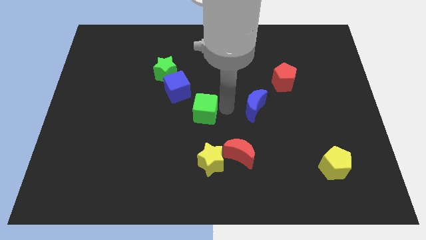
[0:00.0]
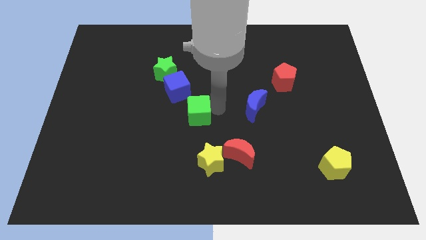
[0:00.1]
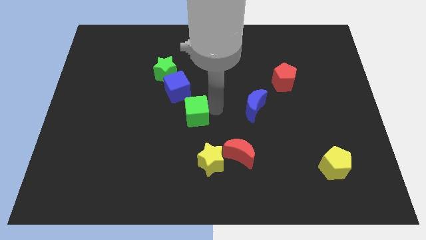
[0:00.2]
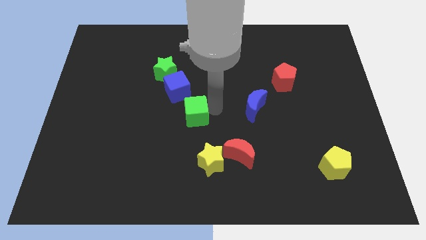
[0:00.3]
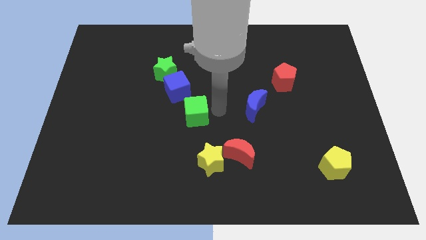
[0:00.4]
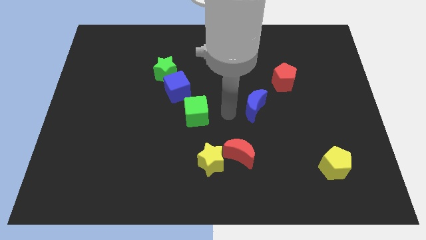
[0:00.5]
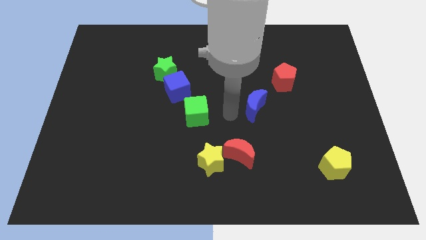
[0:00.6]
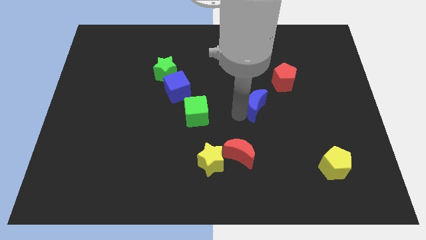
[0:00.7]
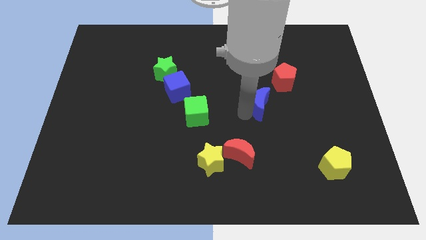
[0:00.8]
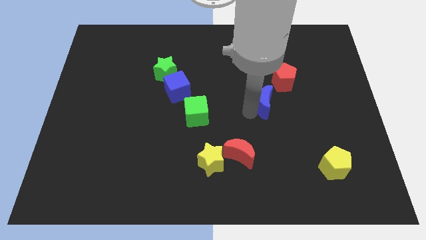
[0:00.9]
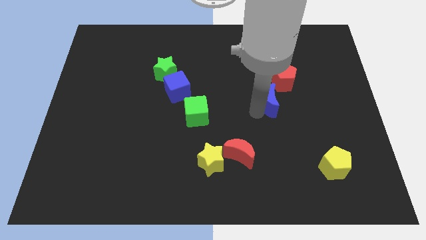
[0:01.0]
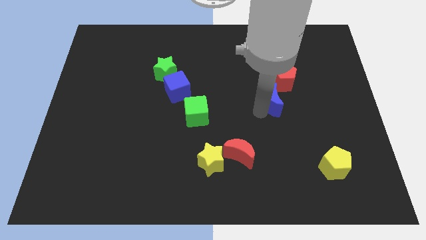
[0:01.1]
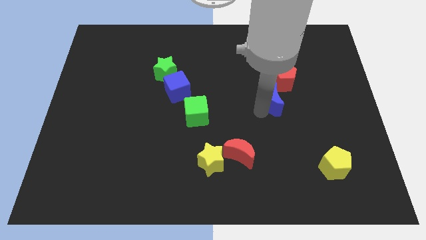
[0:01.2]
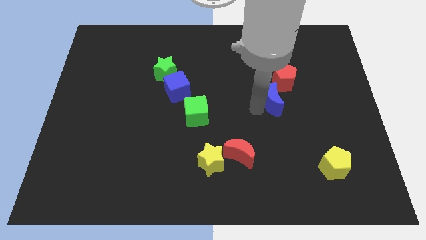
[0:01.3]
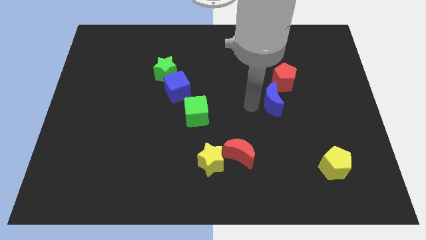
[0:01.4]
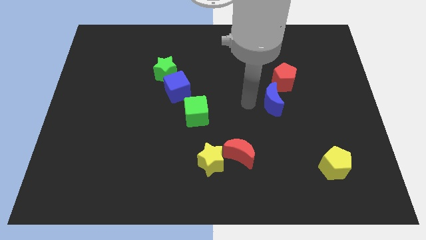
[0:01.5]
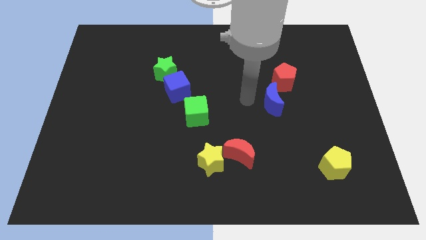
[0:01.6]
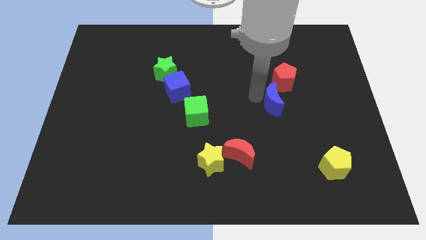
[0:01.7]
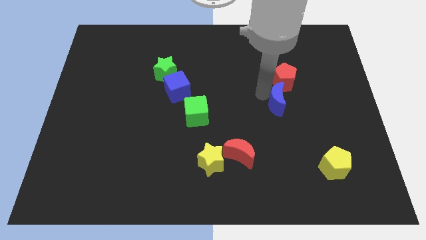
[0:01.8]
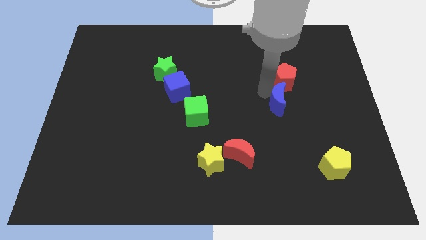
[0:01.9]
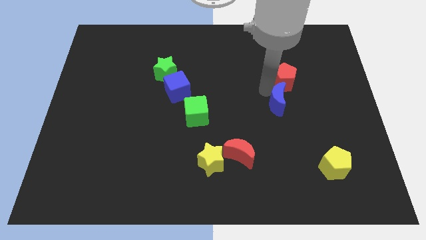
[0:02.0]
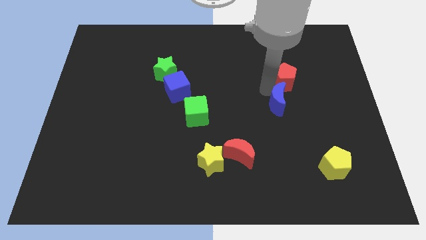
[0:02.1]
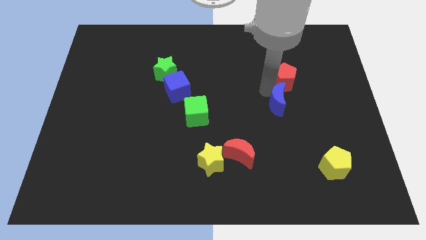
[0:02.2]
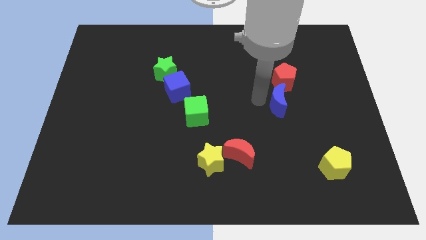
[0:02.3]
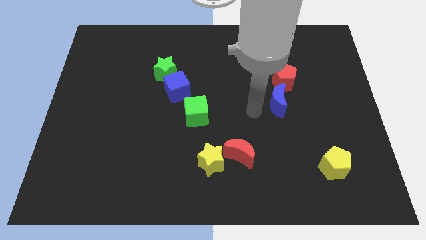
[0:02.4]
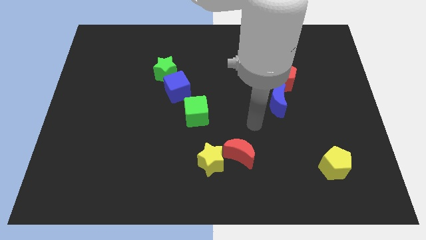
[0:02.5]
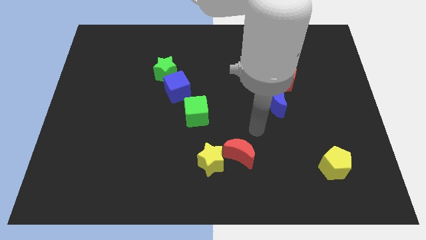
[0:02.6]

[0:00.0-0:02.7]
push blue moon to the bottom of red pentagon

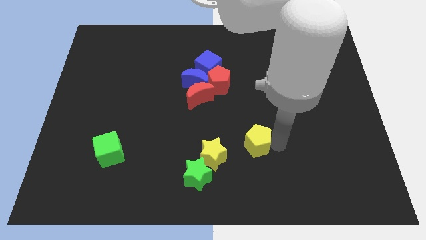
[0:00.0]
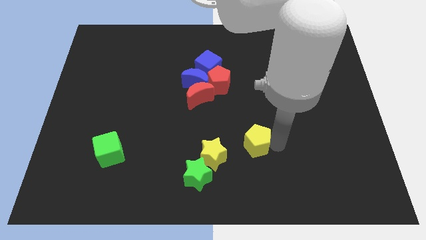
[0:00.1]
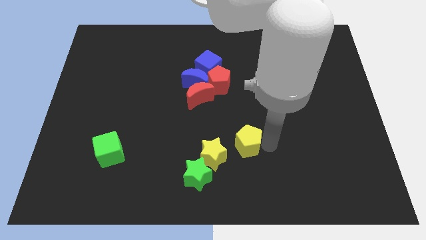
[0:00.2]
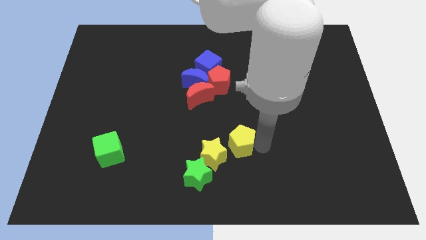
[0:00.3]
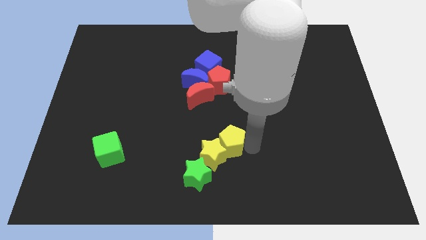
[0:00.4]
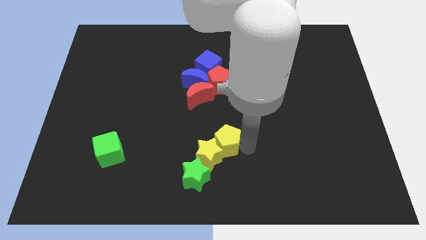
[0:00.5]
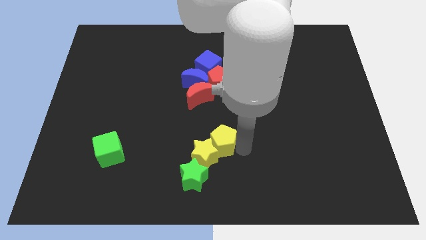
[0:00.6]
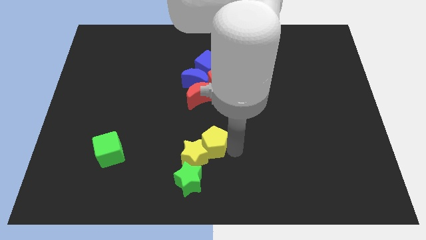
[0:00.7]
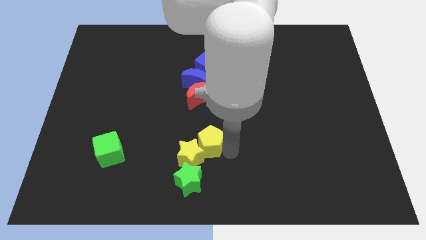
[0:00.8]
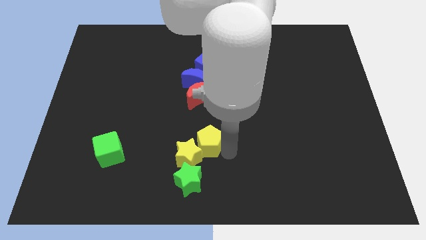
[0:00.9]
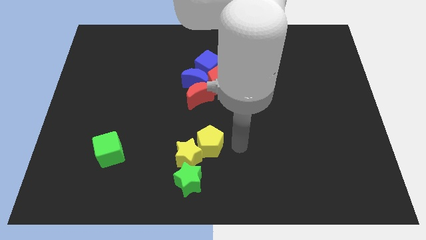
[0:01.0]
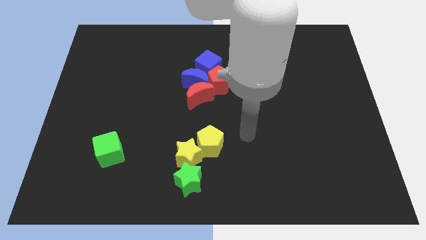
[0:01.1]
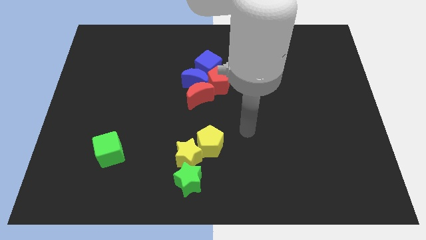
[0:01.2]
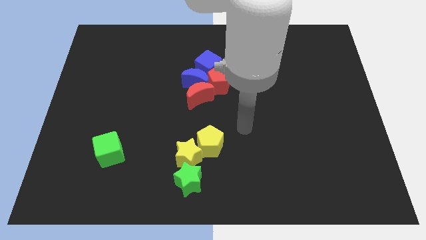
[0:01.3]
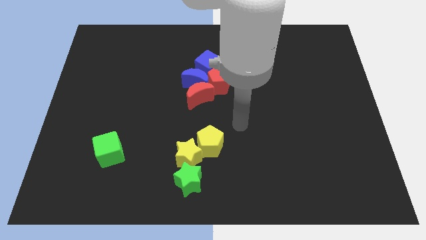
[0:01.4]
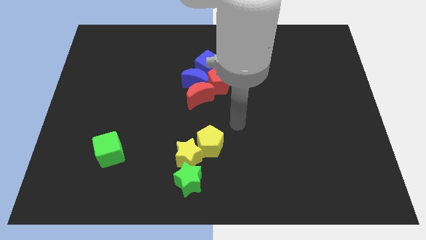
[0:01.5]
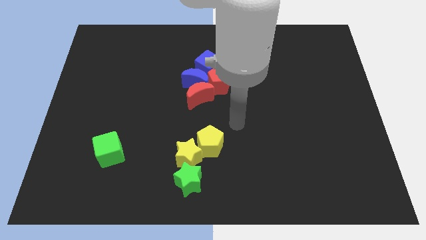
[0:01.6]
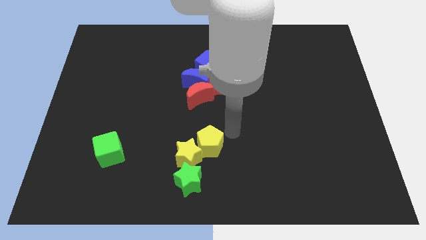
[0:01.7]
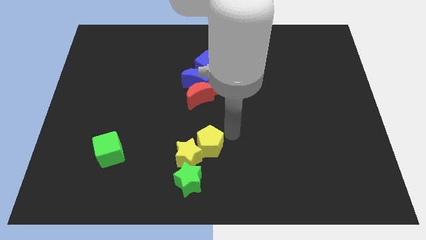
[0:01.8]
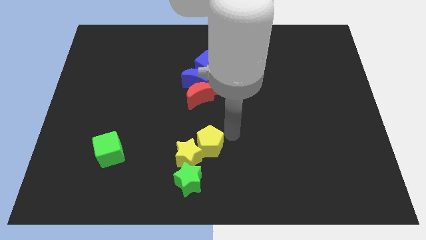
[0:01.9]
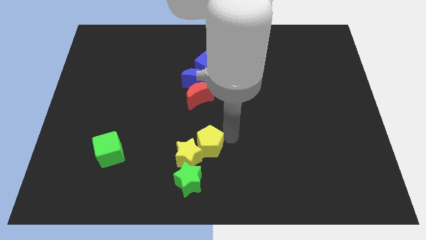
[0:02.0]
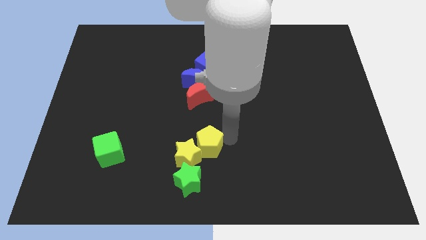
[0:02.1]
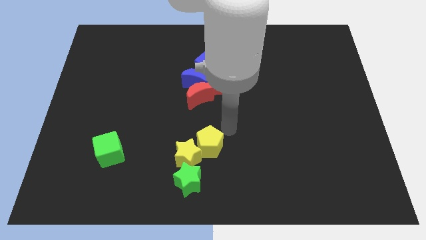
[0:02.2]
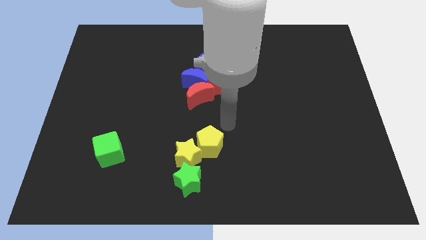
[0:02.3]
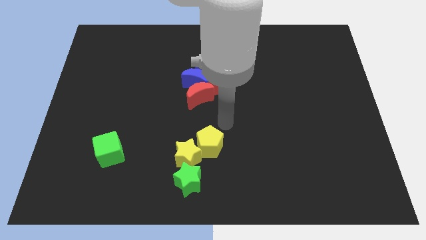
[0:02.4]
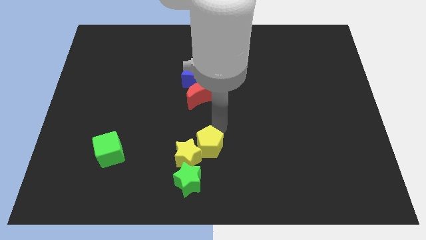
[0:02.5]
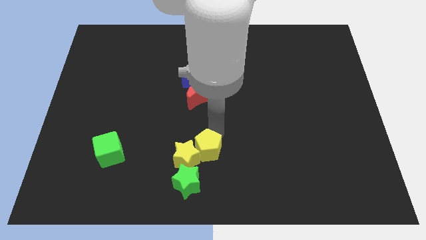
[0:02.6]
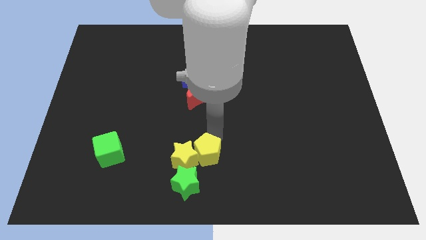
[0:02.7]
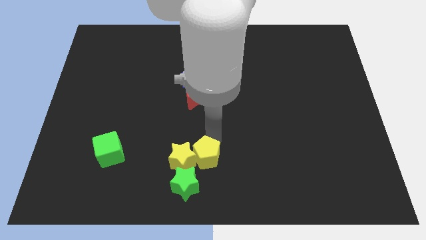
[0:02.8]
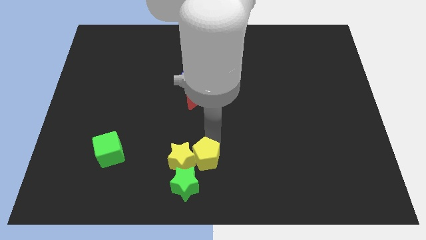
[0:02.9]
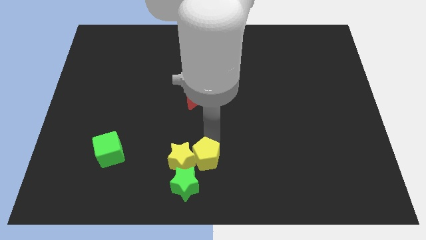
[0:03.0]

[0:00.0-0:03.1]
push the yellow pentagon into the yellow star

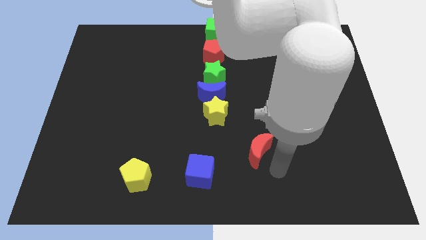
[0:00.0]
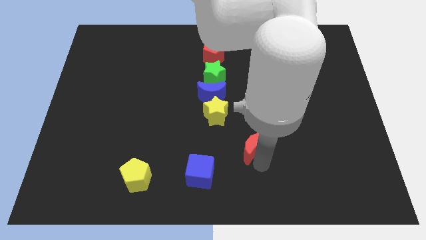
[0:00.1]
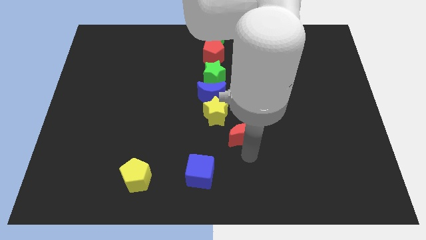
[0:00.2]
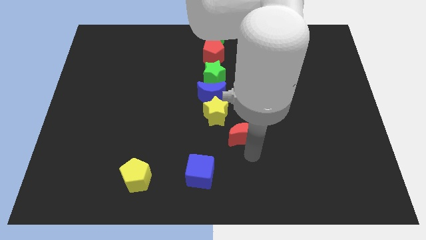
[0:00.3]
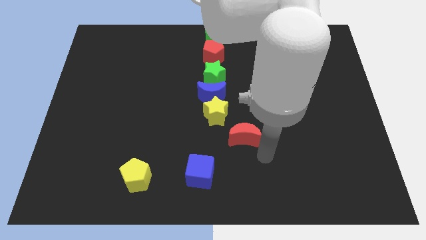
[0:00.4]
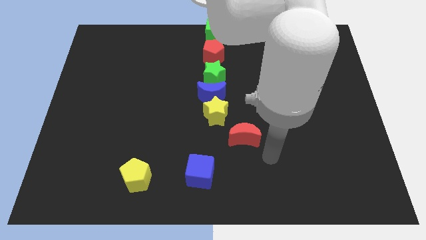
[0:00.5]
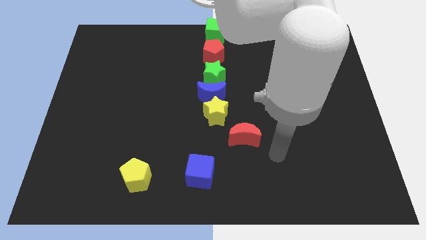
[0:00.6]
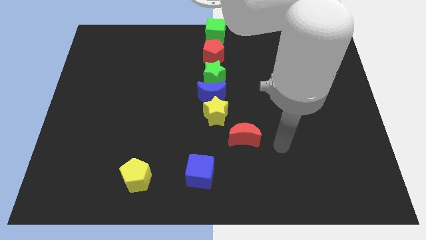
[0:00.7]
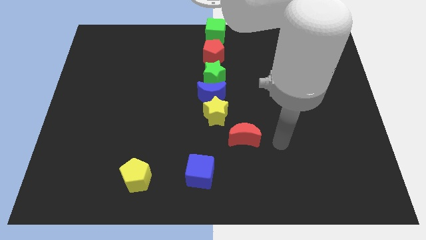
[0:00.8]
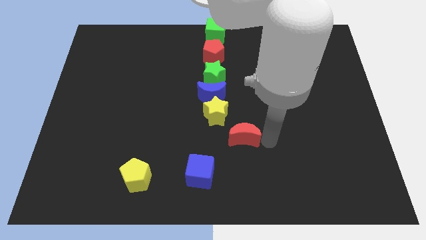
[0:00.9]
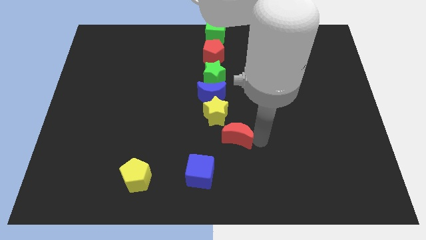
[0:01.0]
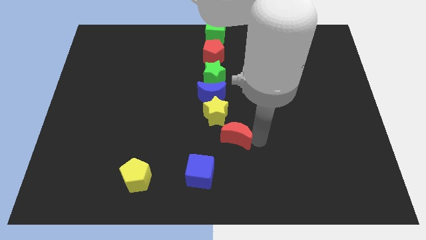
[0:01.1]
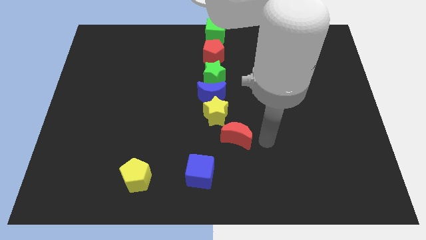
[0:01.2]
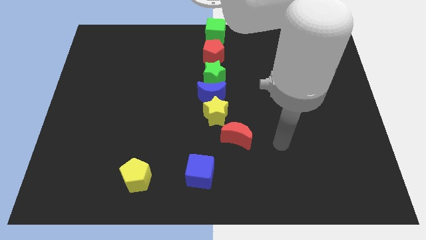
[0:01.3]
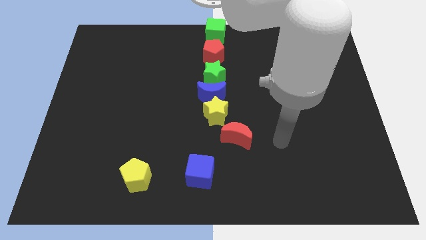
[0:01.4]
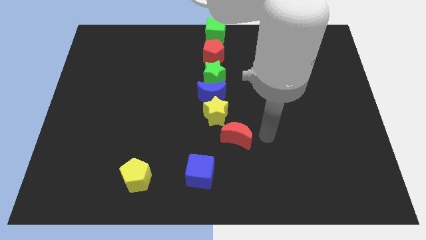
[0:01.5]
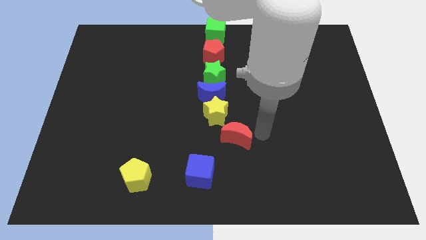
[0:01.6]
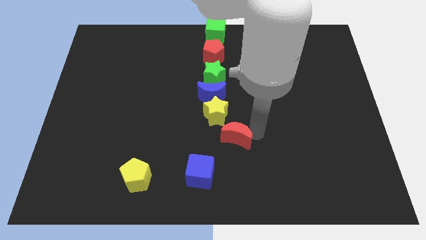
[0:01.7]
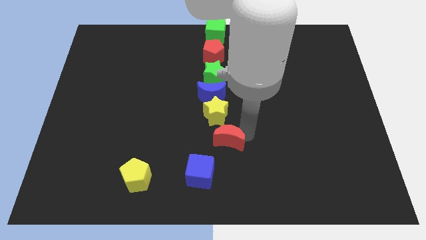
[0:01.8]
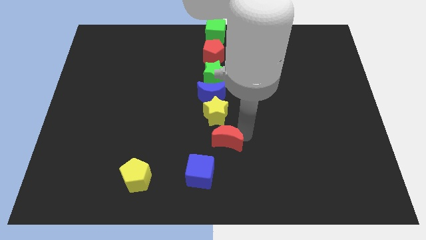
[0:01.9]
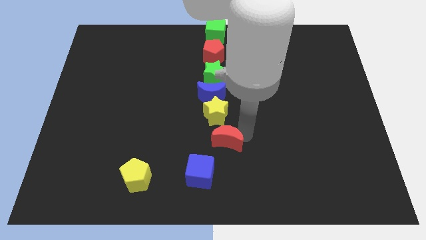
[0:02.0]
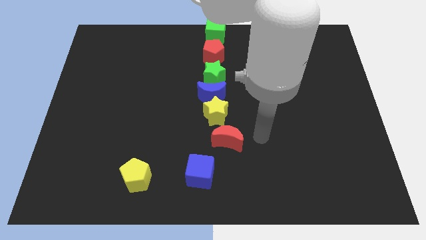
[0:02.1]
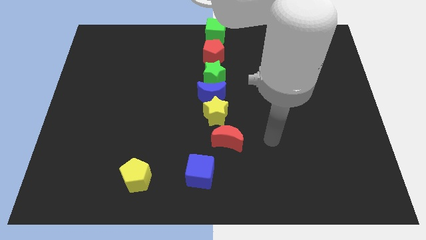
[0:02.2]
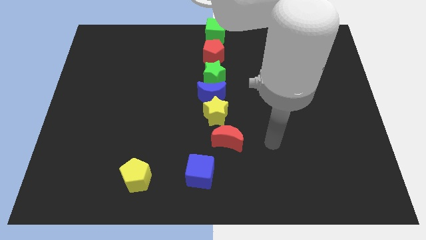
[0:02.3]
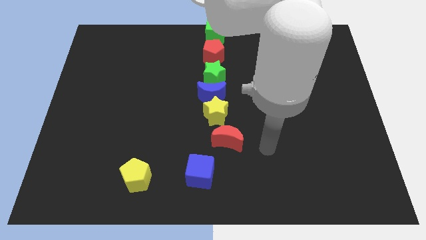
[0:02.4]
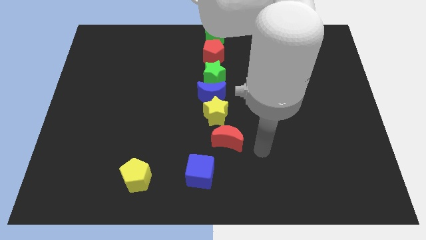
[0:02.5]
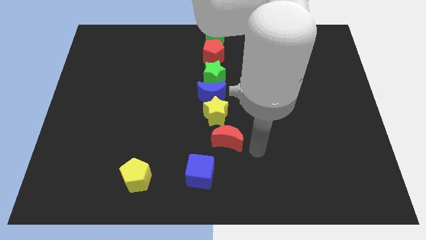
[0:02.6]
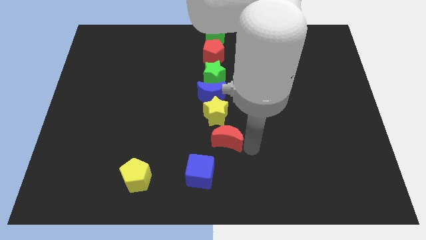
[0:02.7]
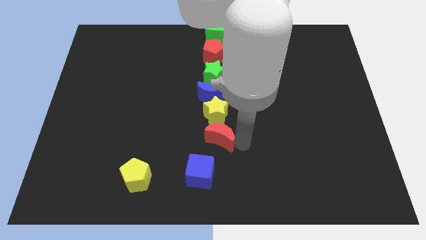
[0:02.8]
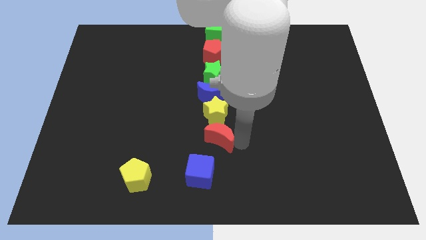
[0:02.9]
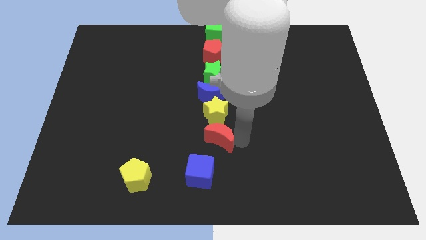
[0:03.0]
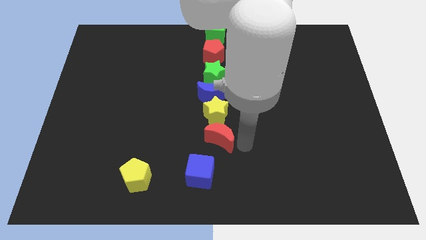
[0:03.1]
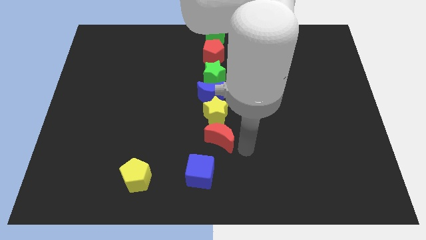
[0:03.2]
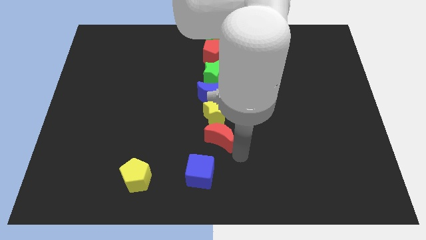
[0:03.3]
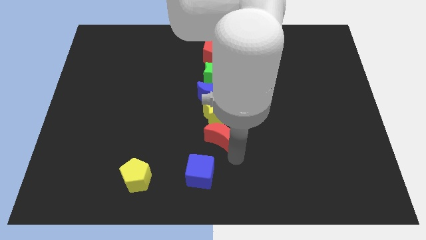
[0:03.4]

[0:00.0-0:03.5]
move the red crescent below the yellow star
